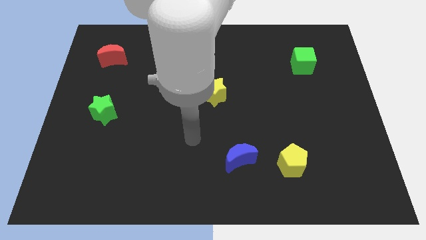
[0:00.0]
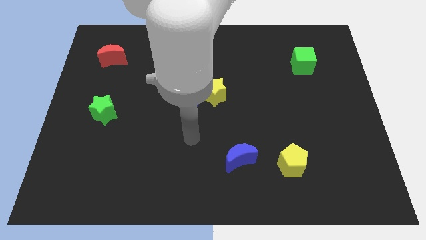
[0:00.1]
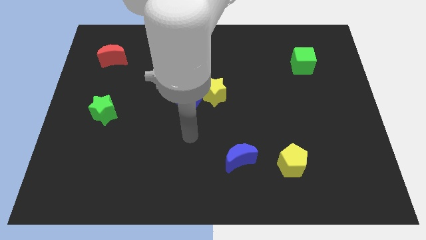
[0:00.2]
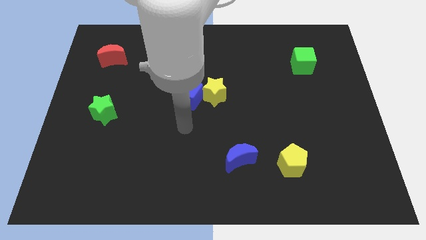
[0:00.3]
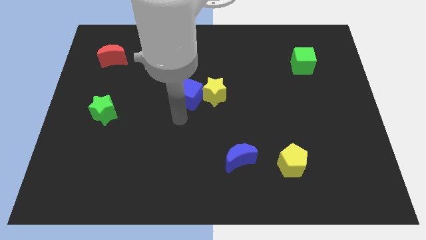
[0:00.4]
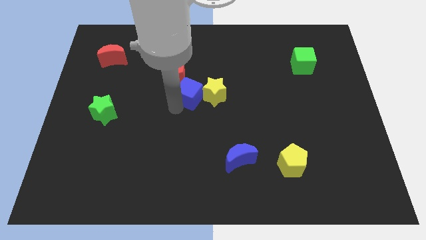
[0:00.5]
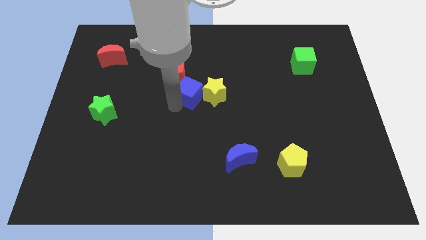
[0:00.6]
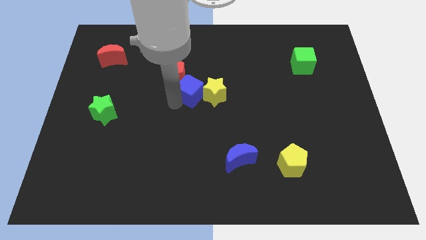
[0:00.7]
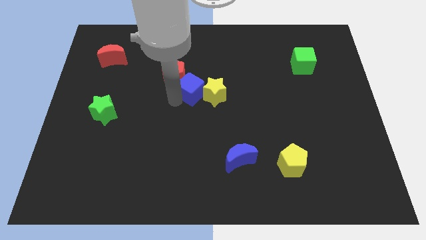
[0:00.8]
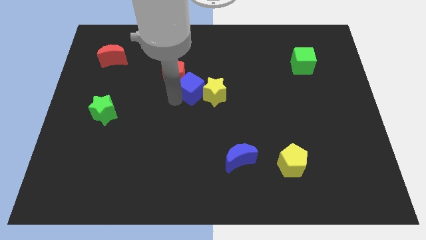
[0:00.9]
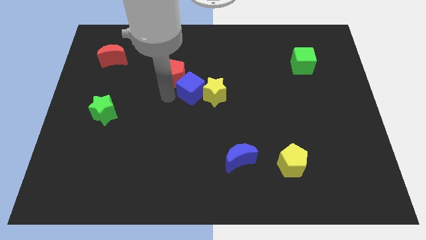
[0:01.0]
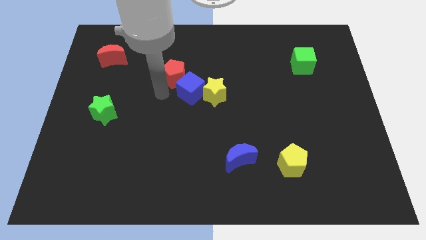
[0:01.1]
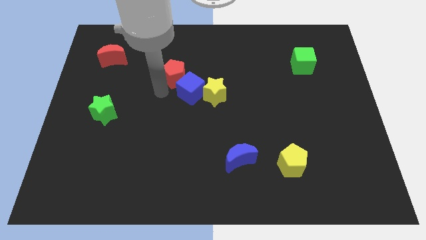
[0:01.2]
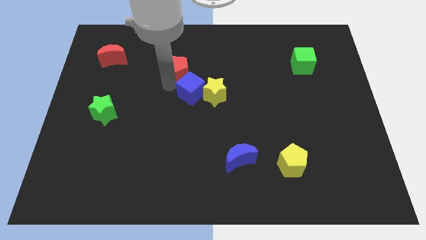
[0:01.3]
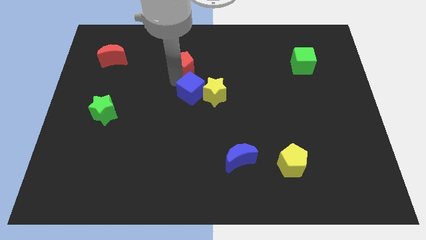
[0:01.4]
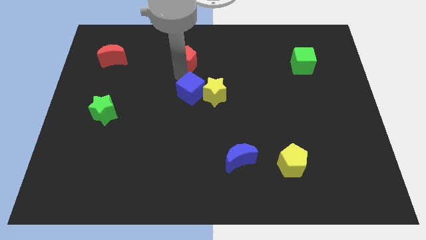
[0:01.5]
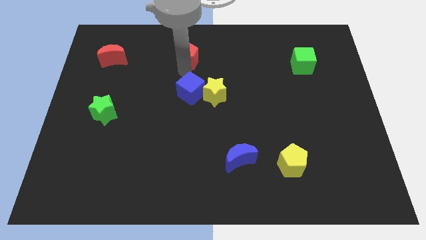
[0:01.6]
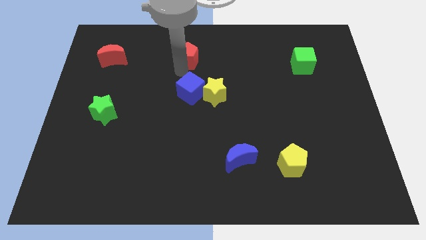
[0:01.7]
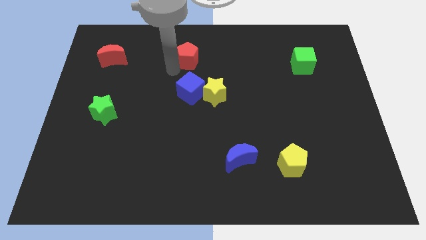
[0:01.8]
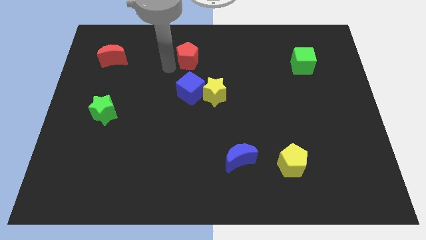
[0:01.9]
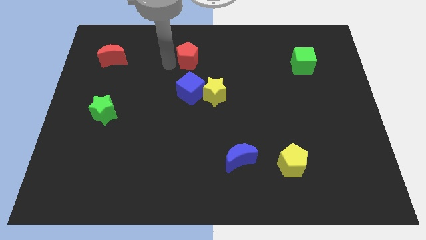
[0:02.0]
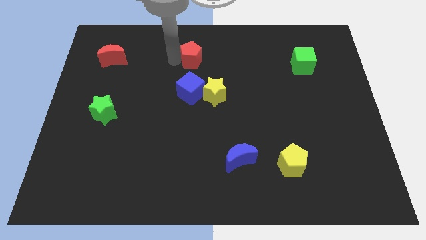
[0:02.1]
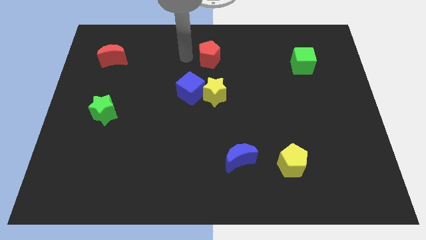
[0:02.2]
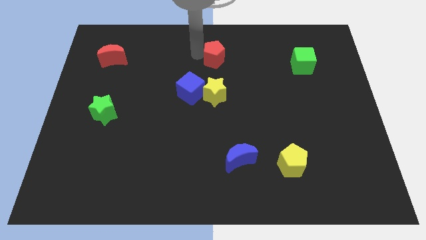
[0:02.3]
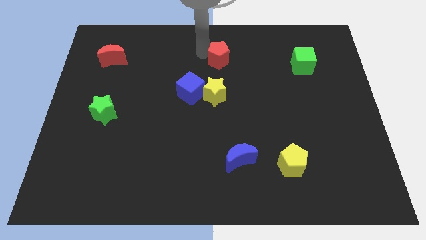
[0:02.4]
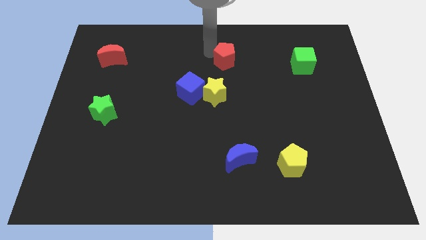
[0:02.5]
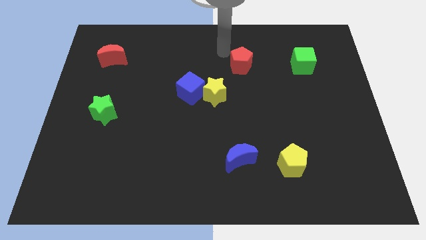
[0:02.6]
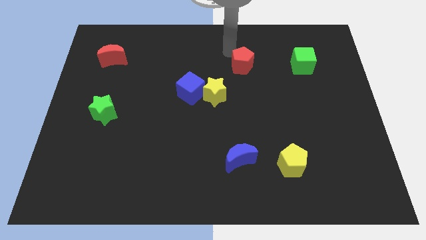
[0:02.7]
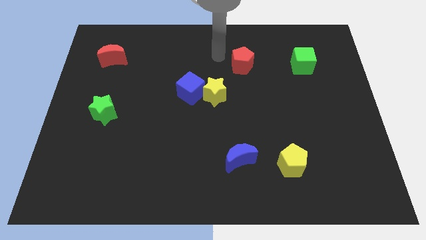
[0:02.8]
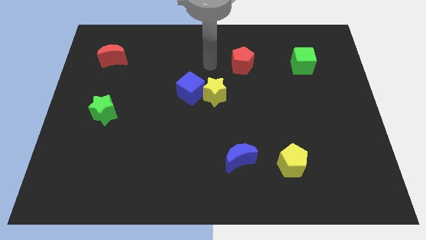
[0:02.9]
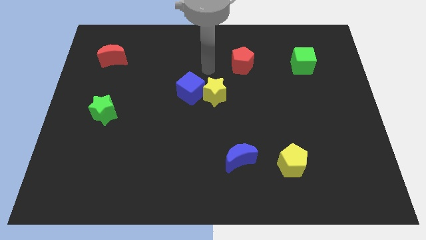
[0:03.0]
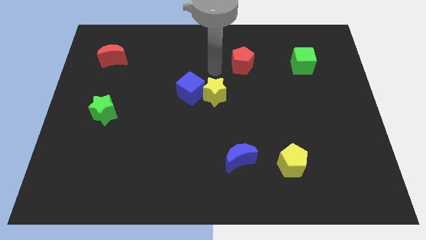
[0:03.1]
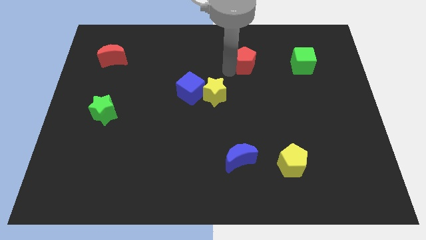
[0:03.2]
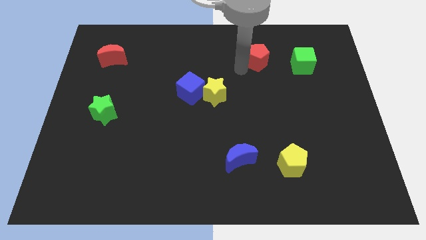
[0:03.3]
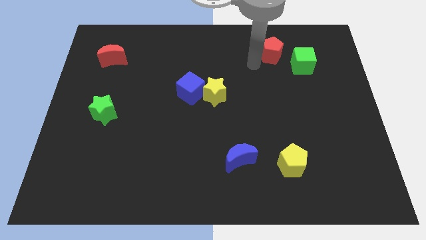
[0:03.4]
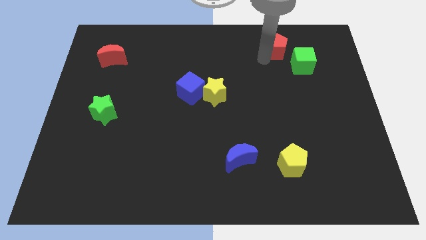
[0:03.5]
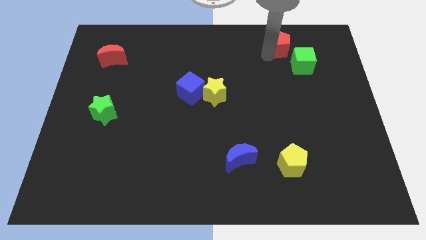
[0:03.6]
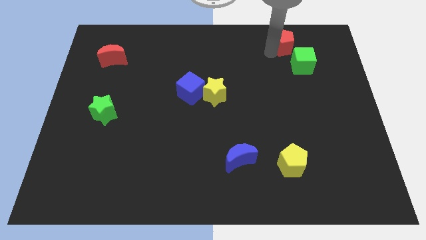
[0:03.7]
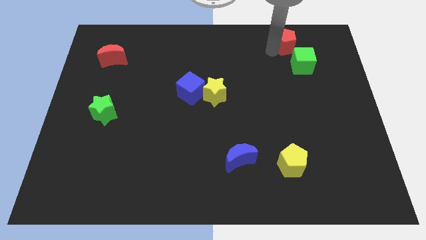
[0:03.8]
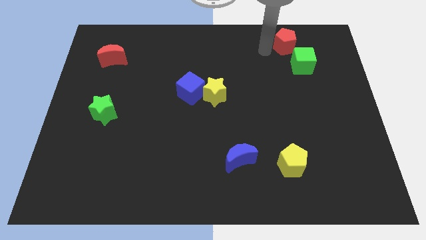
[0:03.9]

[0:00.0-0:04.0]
place the red pentagon to the top left of green cube

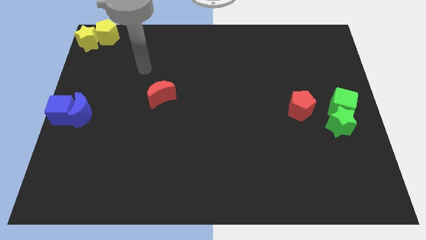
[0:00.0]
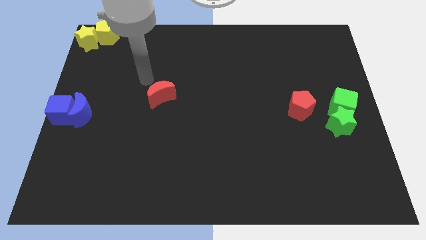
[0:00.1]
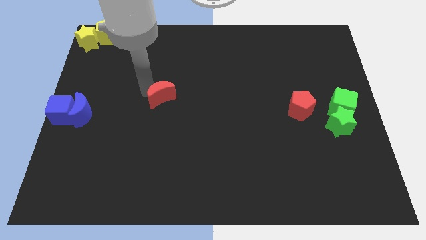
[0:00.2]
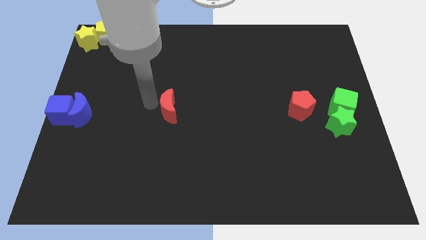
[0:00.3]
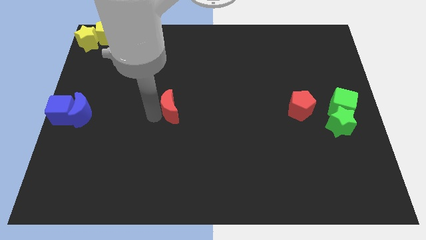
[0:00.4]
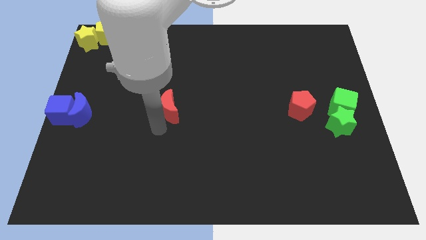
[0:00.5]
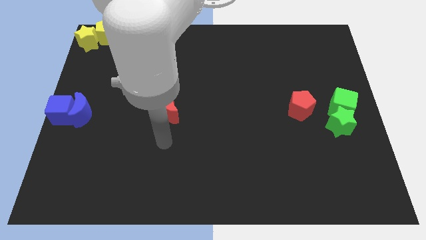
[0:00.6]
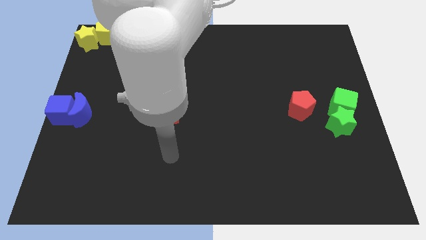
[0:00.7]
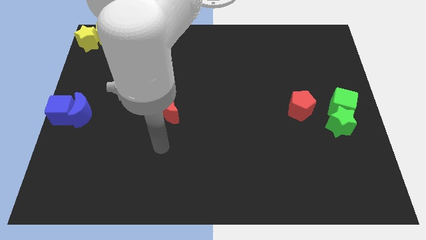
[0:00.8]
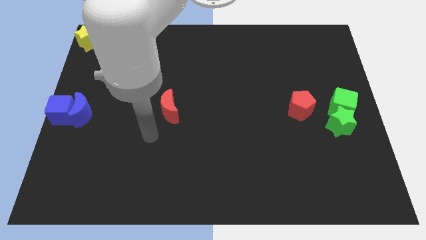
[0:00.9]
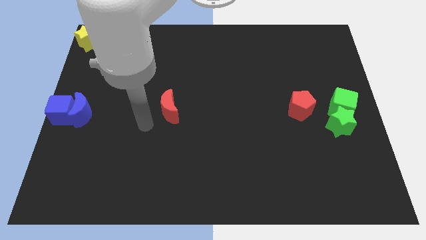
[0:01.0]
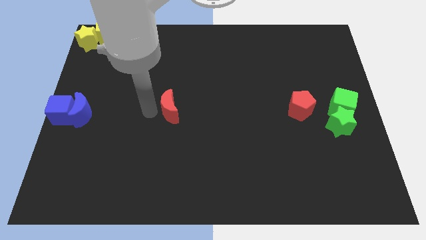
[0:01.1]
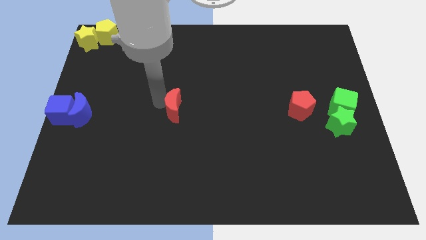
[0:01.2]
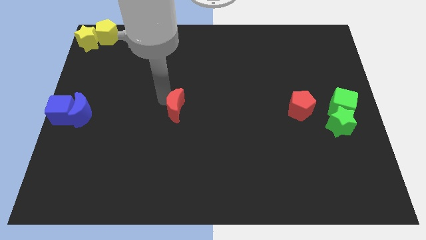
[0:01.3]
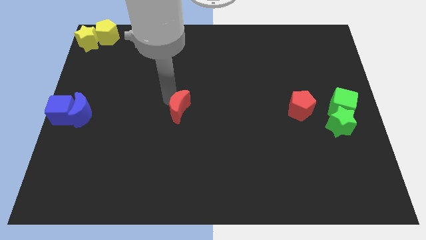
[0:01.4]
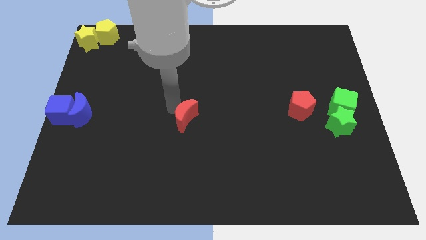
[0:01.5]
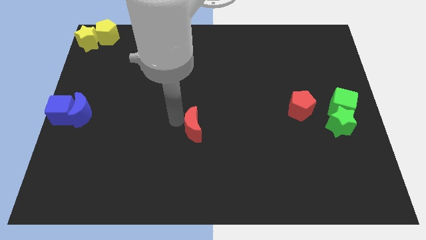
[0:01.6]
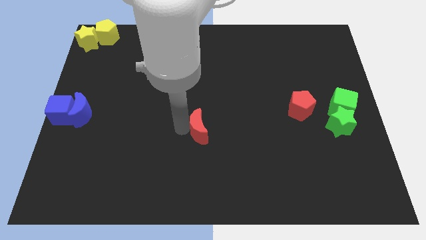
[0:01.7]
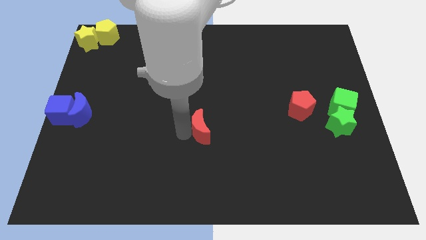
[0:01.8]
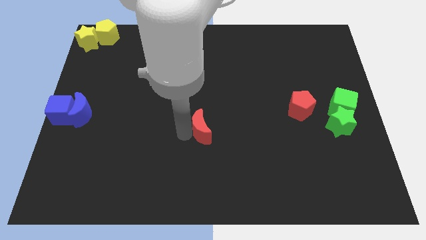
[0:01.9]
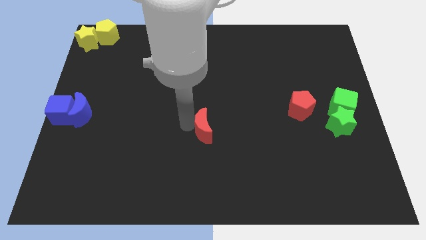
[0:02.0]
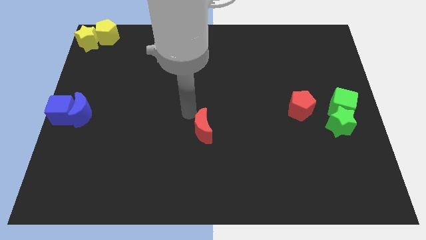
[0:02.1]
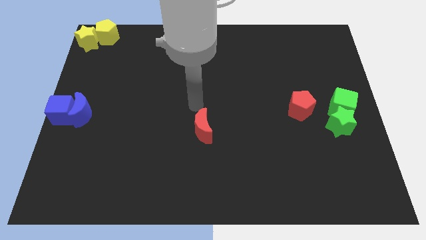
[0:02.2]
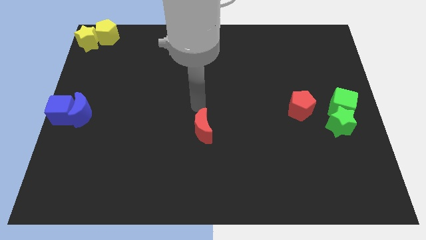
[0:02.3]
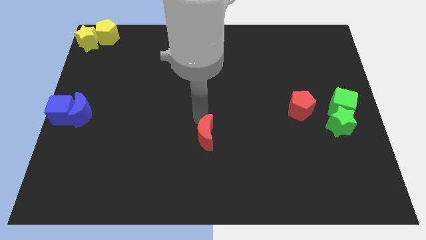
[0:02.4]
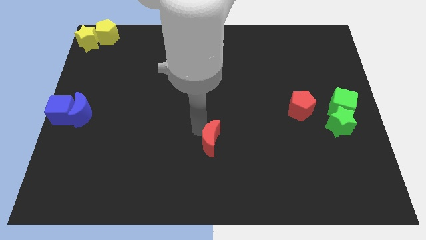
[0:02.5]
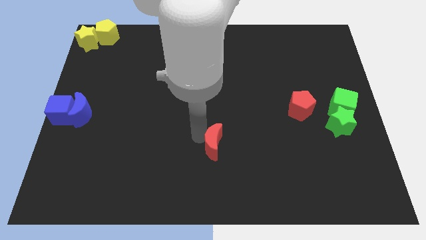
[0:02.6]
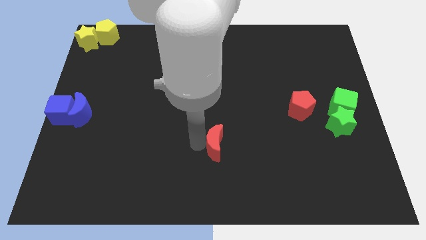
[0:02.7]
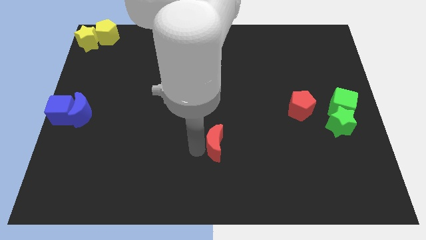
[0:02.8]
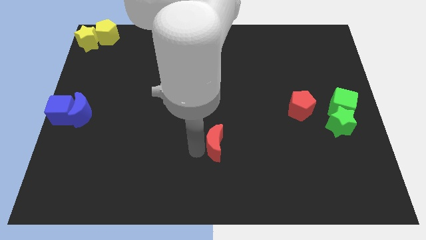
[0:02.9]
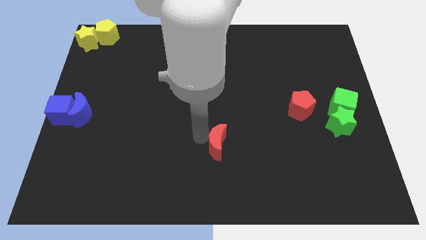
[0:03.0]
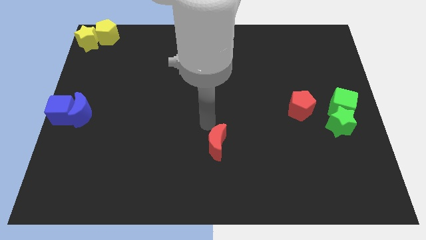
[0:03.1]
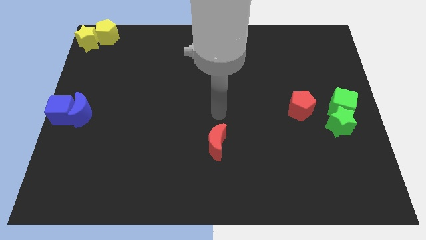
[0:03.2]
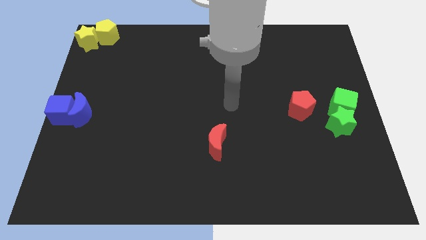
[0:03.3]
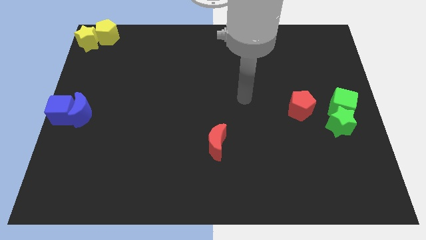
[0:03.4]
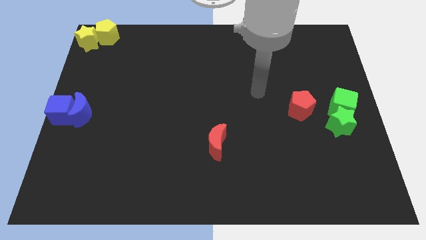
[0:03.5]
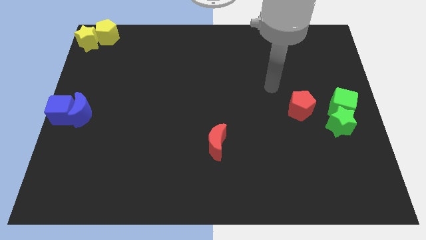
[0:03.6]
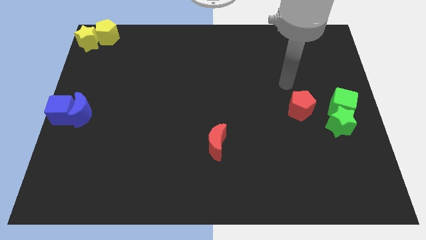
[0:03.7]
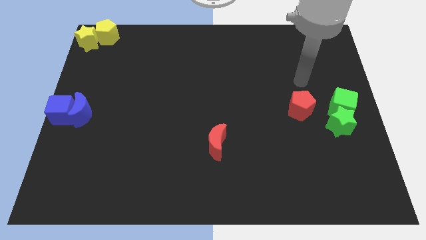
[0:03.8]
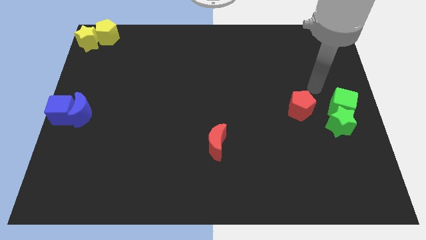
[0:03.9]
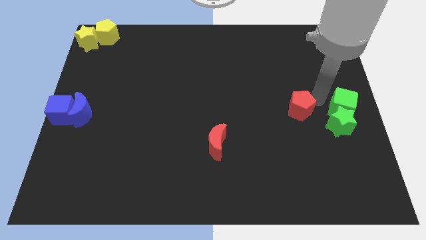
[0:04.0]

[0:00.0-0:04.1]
move the red moon towards the bottom center

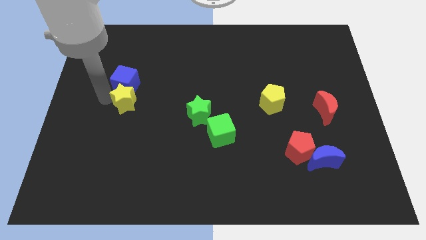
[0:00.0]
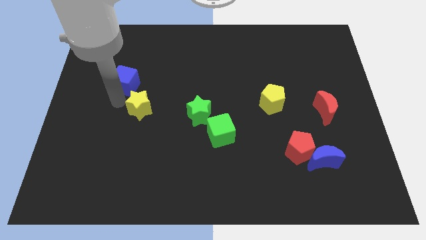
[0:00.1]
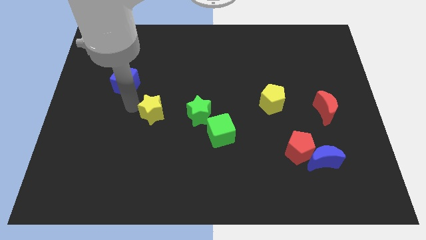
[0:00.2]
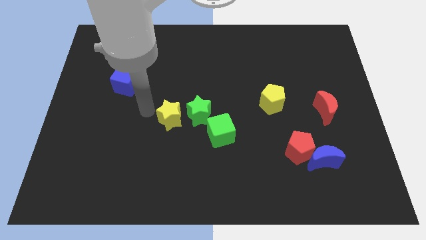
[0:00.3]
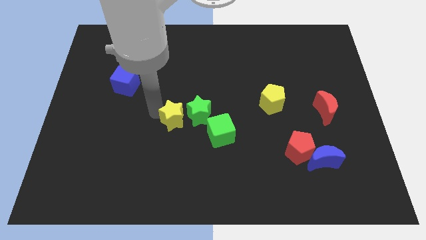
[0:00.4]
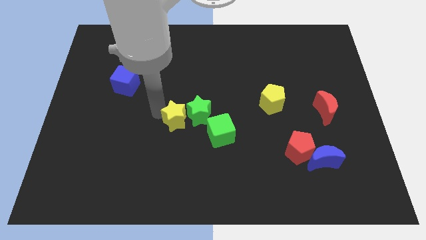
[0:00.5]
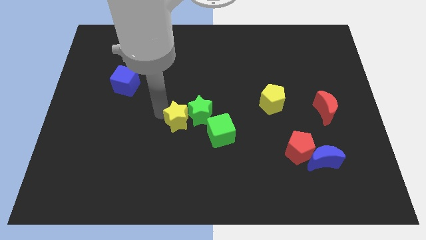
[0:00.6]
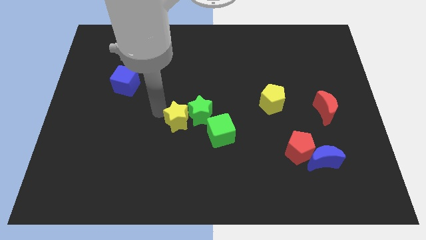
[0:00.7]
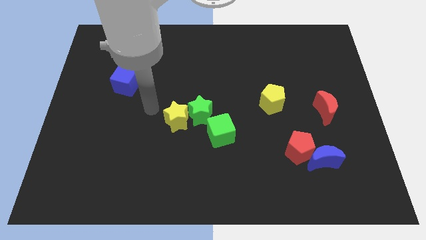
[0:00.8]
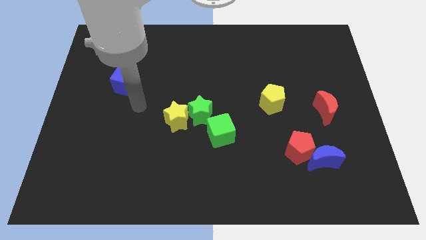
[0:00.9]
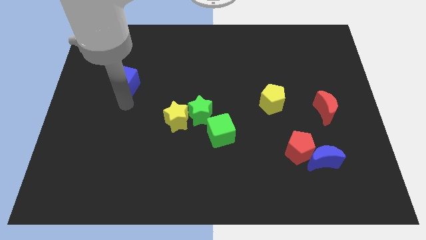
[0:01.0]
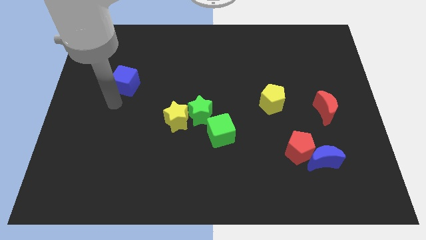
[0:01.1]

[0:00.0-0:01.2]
separate yellow star from blue cube
